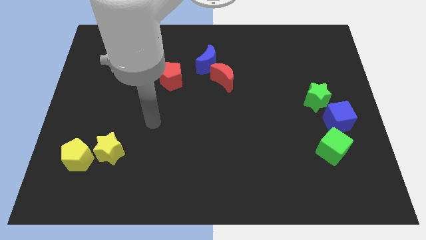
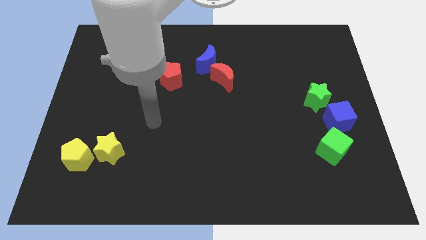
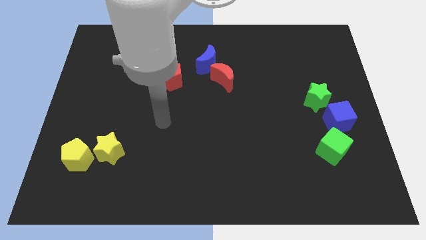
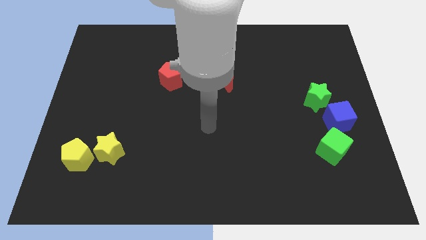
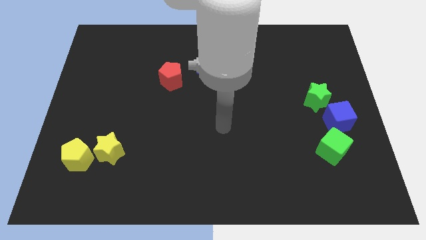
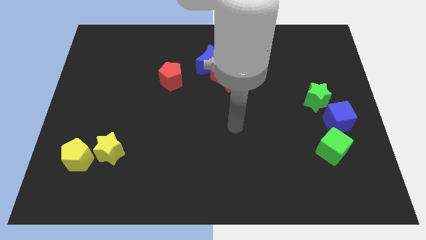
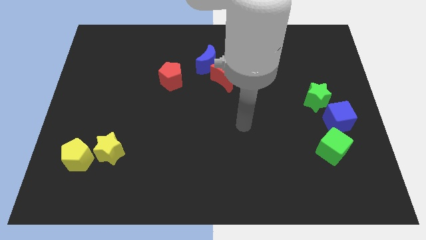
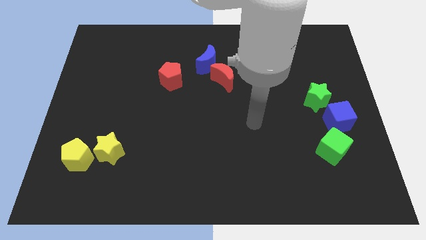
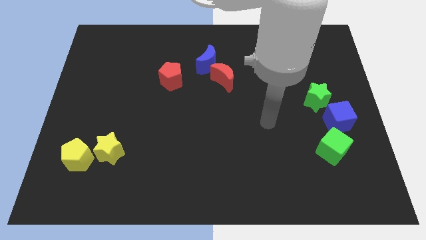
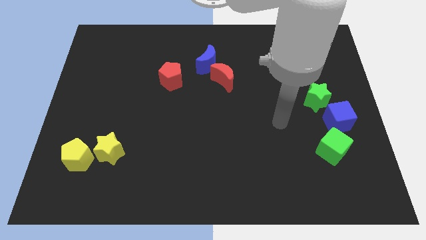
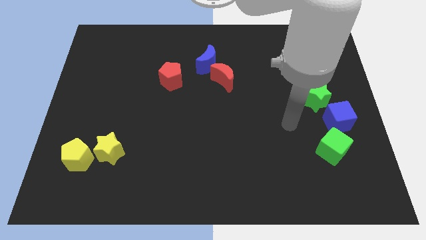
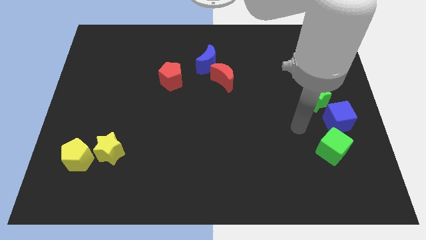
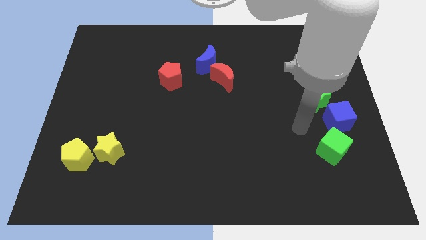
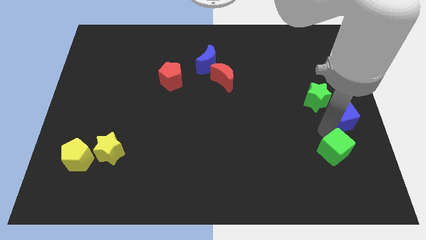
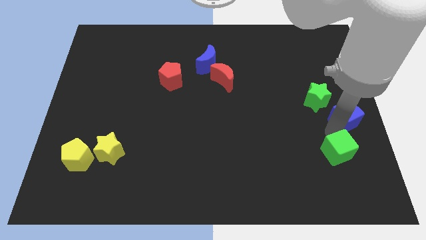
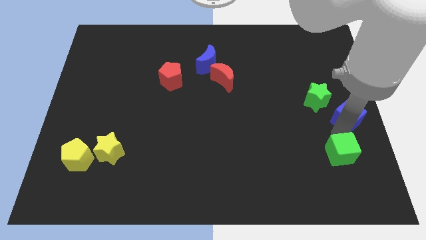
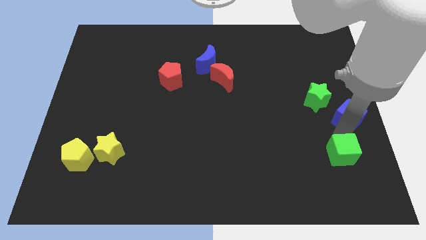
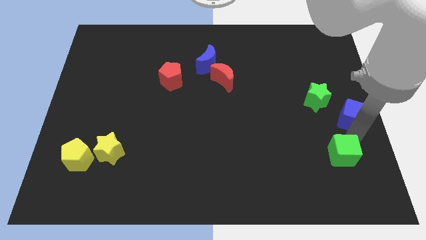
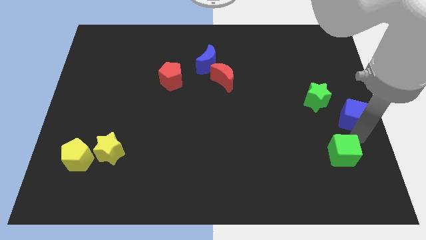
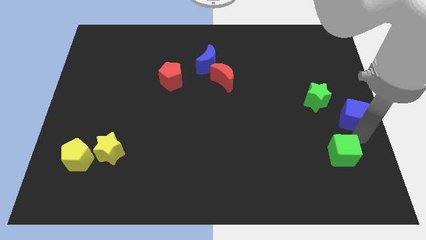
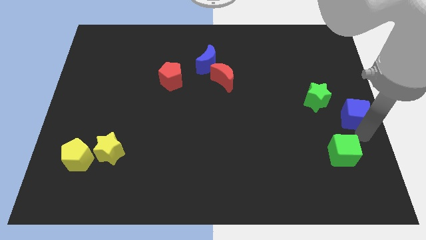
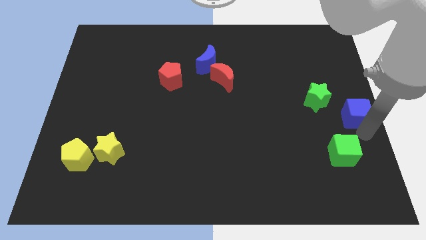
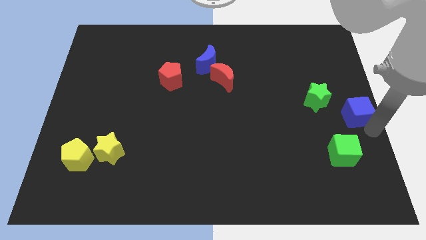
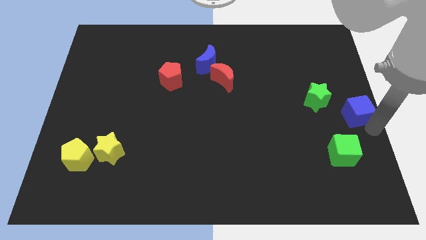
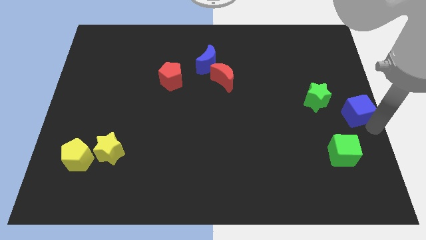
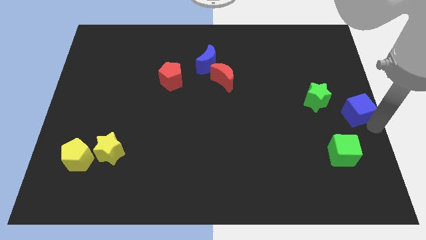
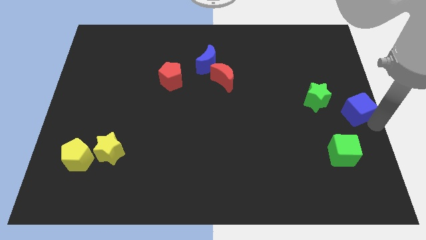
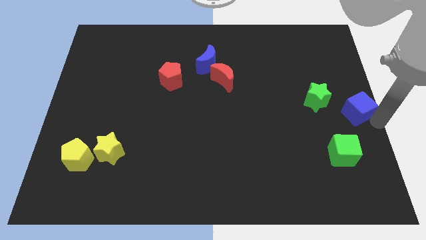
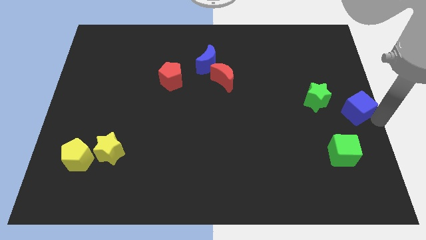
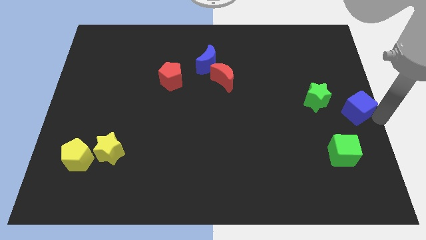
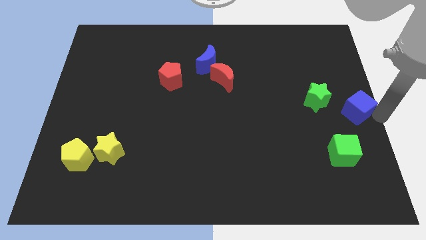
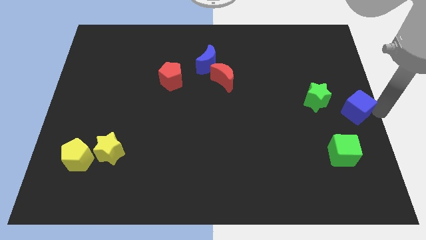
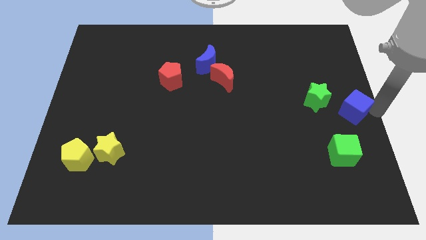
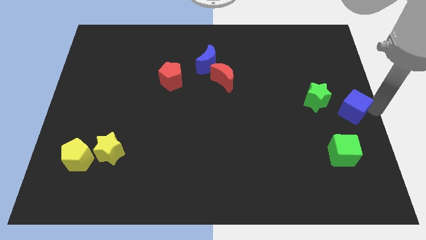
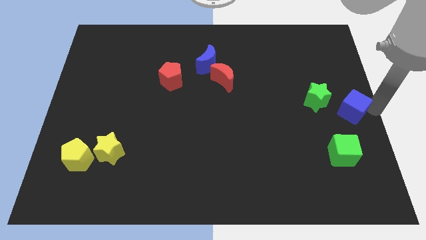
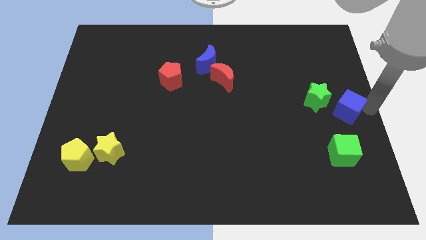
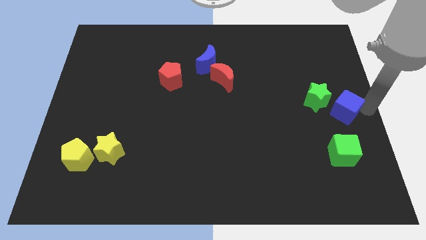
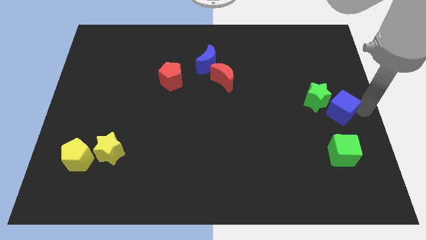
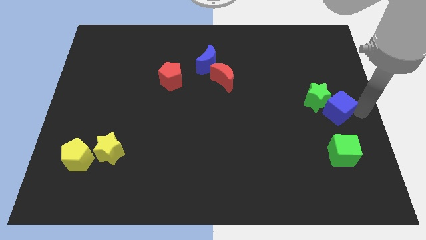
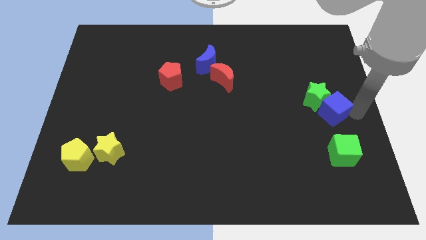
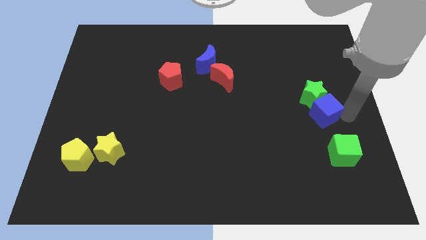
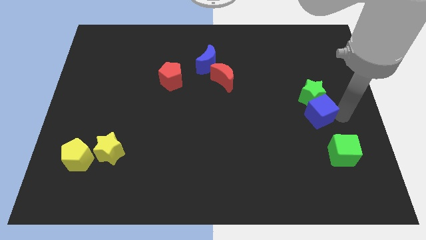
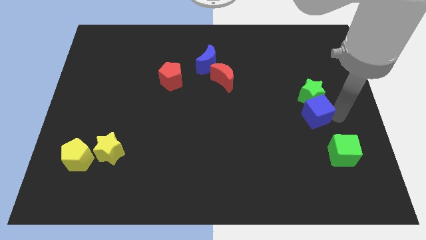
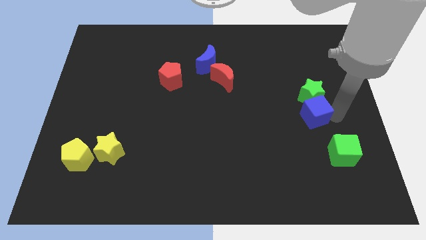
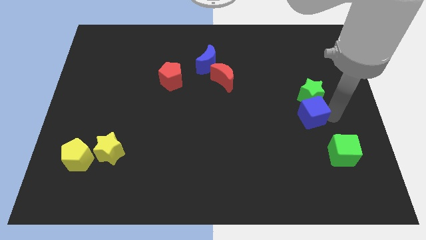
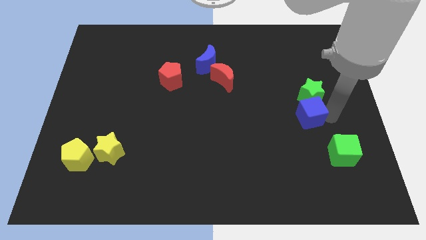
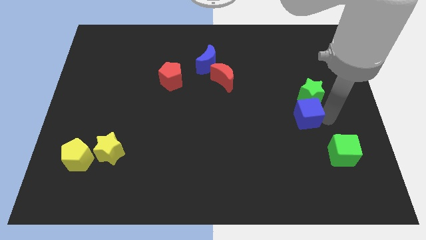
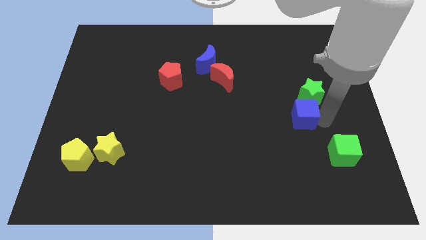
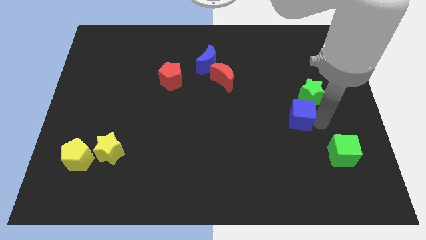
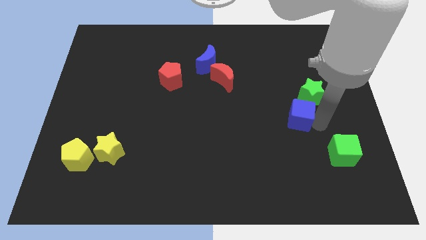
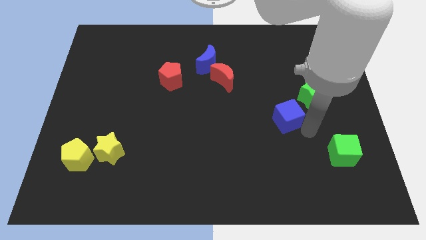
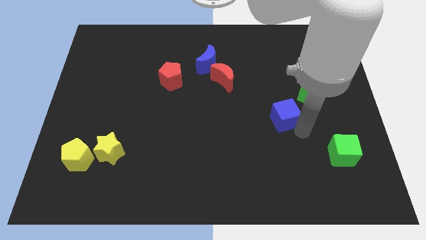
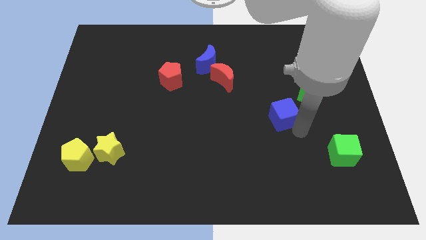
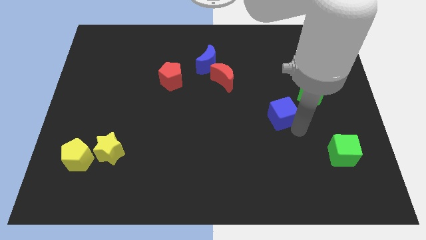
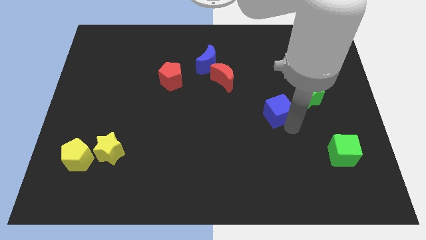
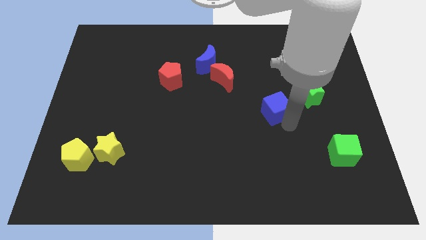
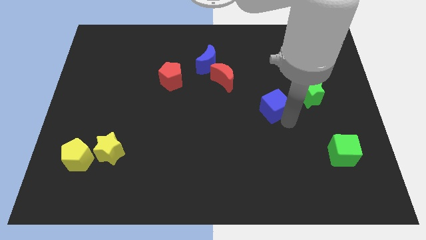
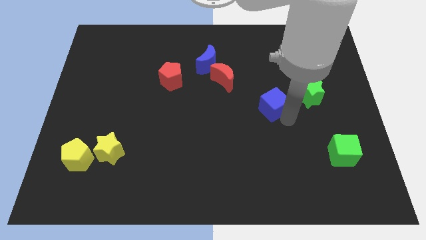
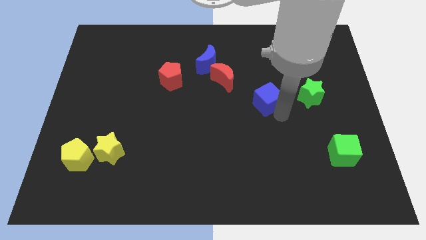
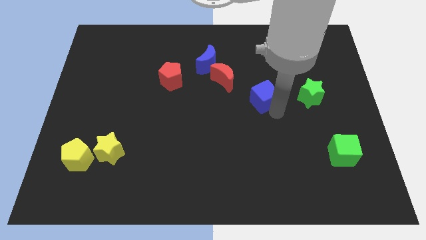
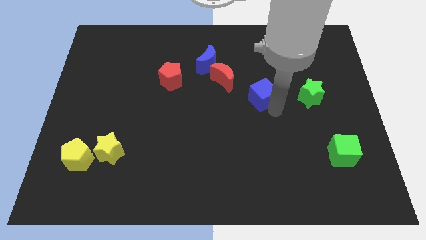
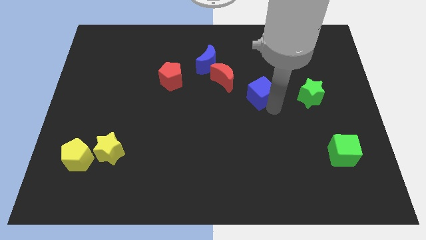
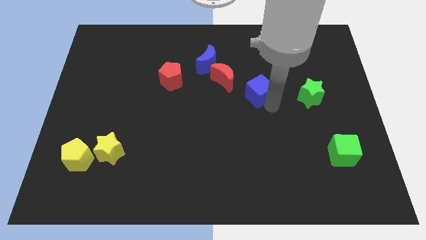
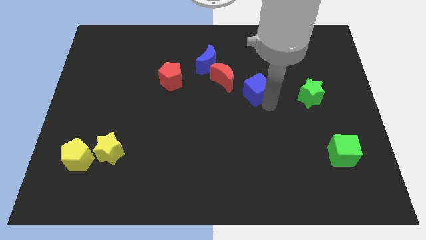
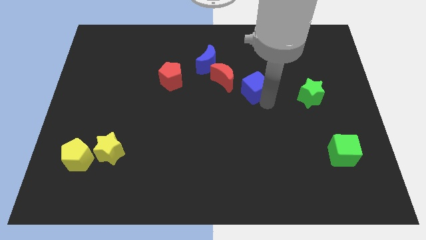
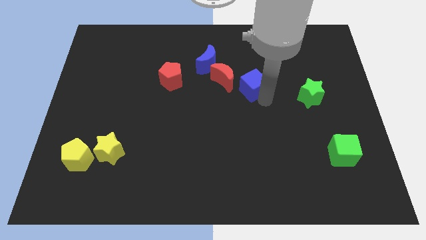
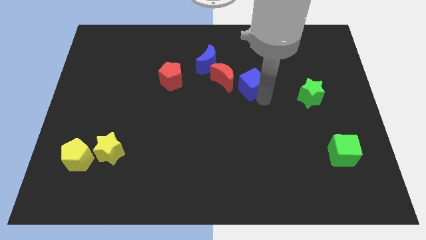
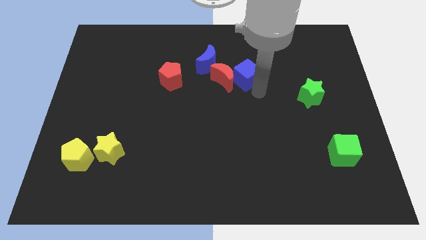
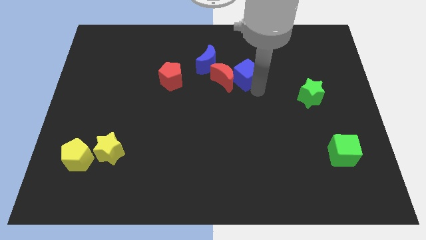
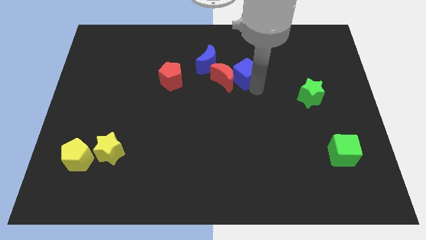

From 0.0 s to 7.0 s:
move the blue cube to the red moon

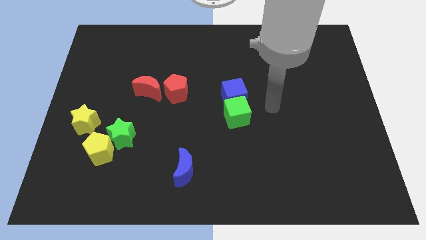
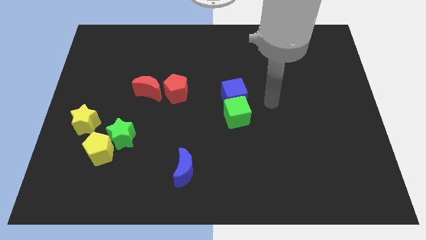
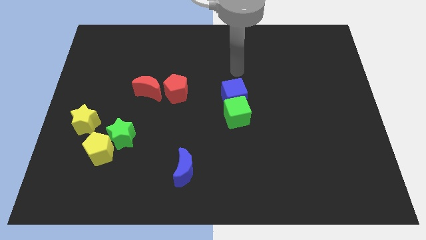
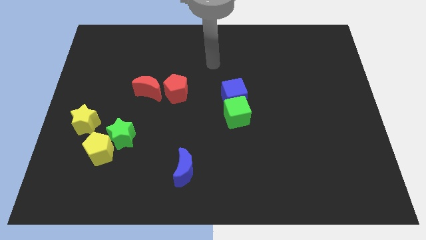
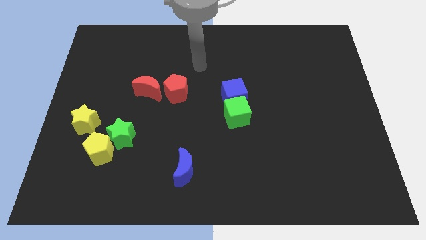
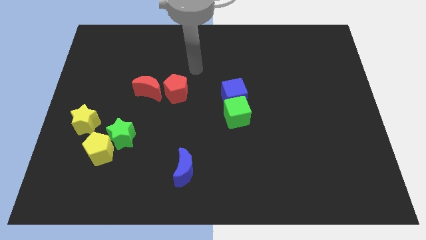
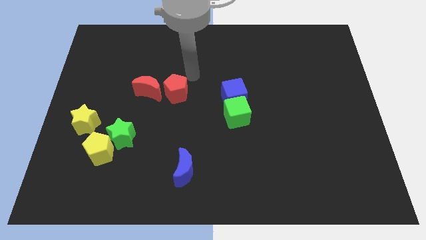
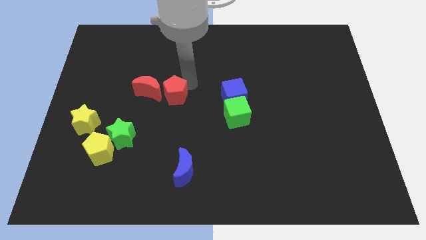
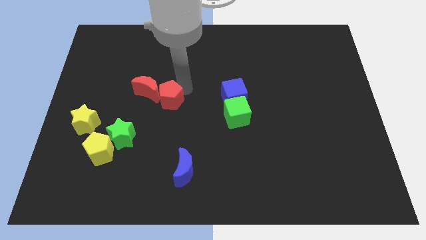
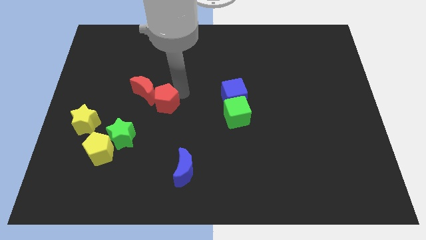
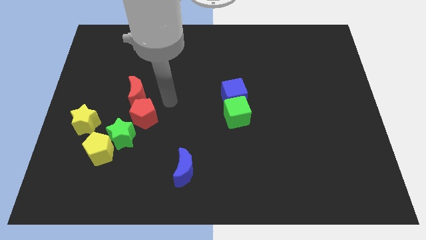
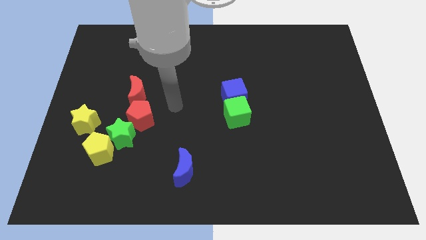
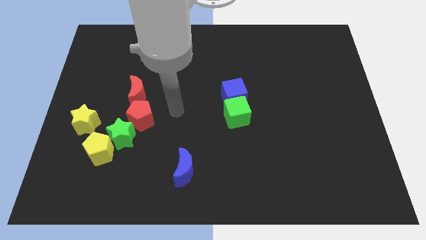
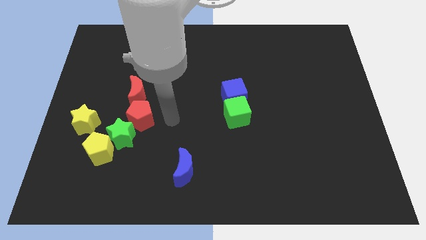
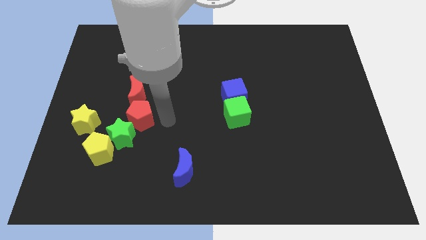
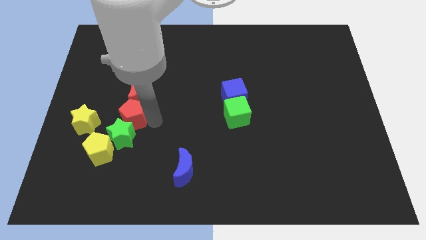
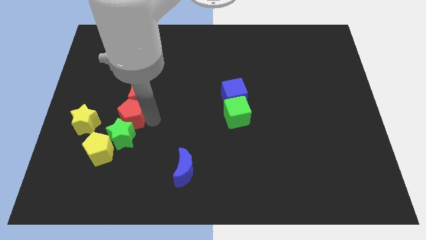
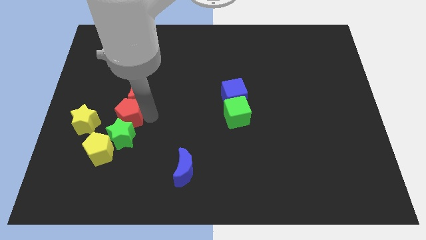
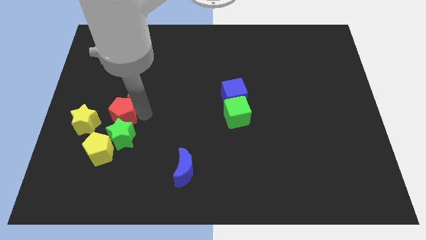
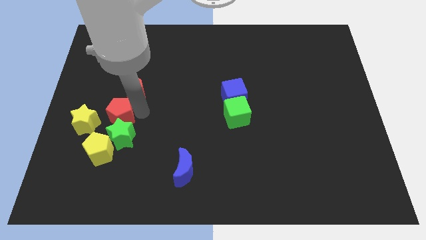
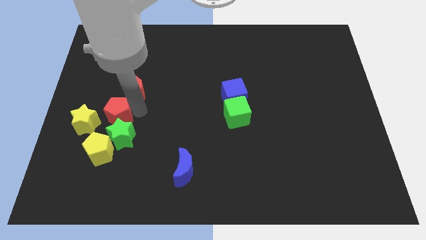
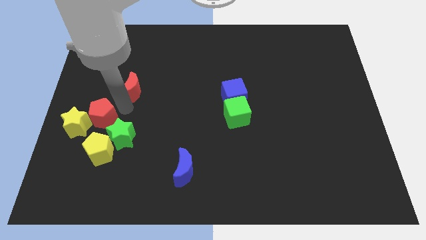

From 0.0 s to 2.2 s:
put the red pentagon towards the yellow star
